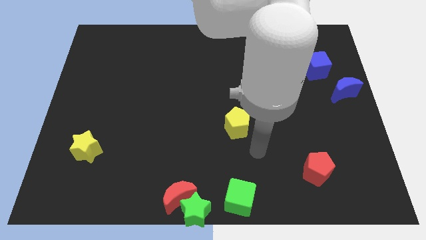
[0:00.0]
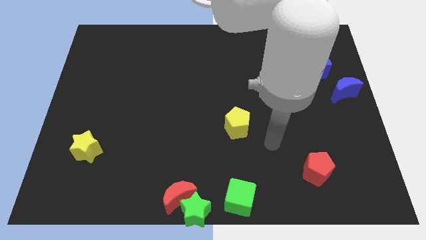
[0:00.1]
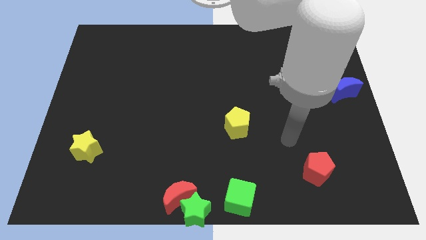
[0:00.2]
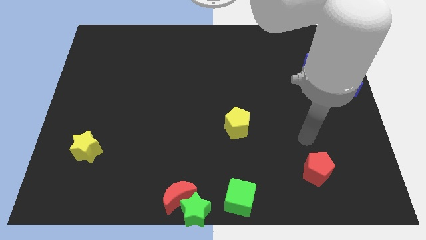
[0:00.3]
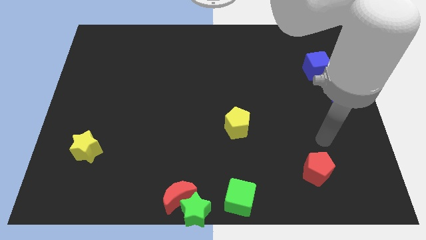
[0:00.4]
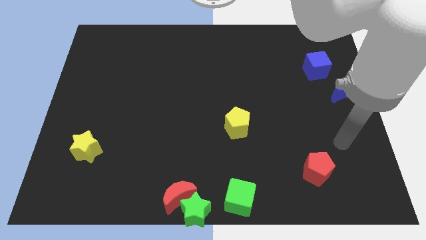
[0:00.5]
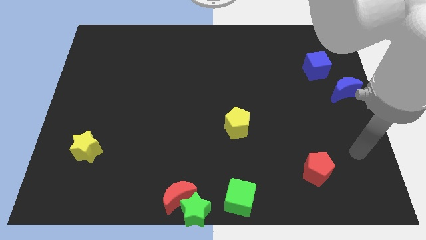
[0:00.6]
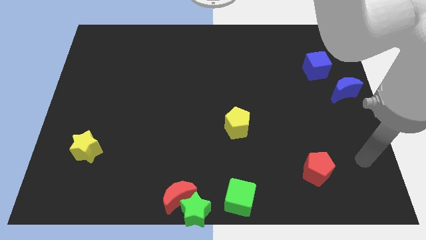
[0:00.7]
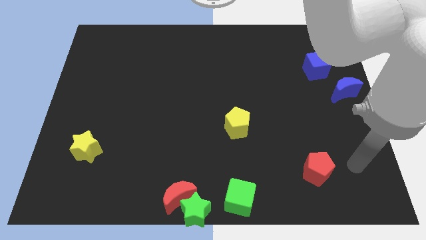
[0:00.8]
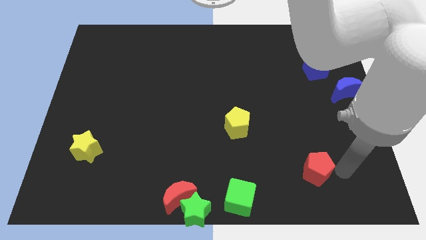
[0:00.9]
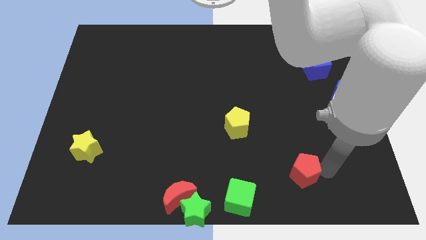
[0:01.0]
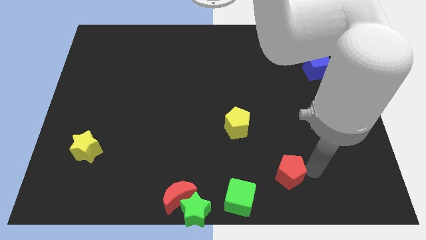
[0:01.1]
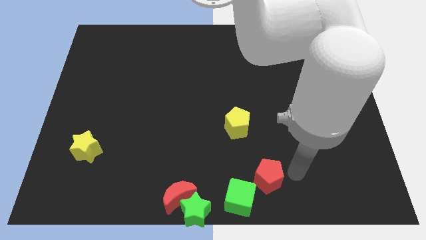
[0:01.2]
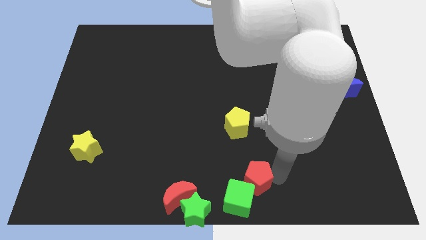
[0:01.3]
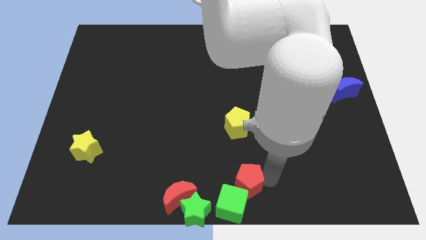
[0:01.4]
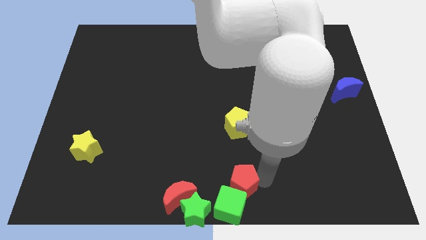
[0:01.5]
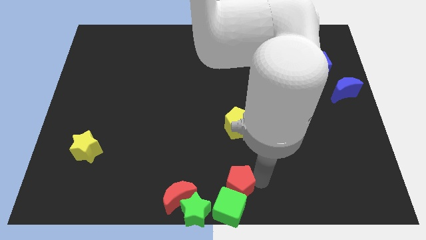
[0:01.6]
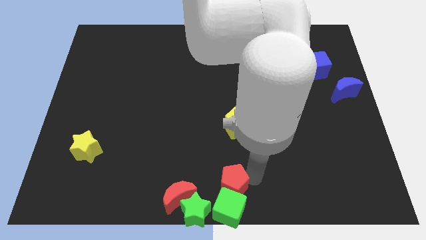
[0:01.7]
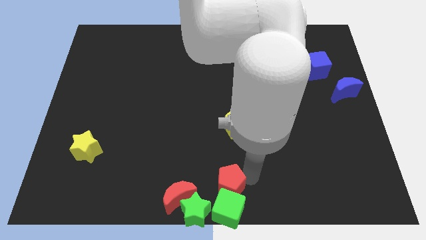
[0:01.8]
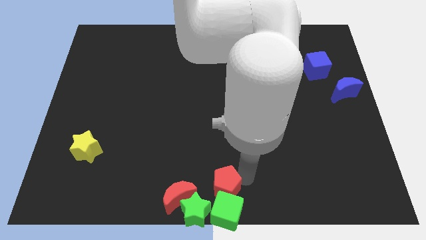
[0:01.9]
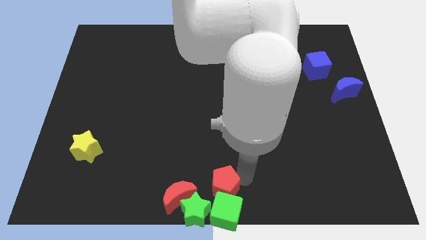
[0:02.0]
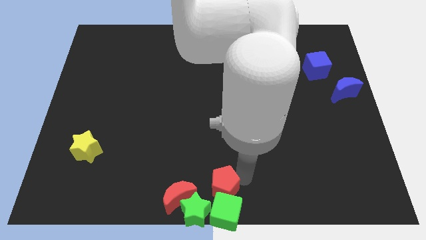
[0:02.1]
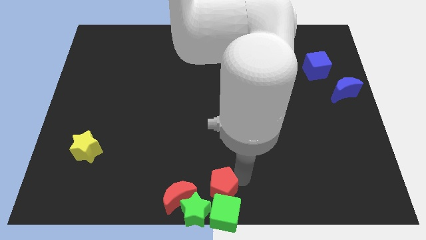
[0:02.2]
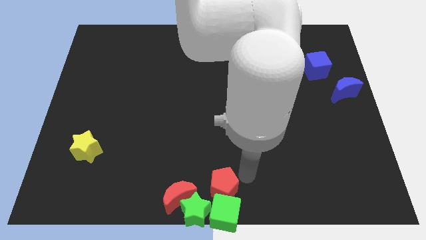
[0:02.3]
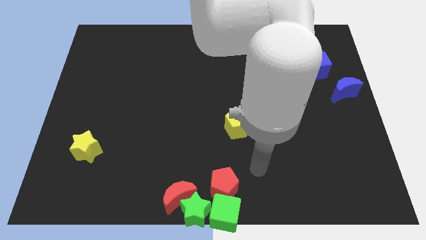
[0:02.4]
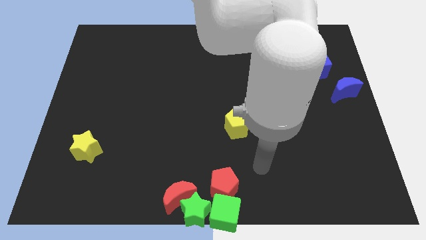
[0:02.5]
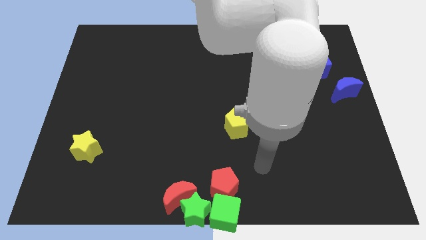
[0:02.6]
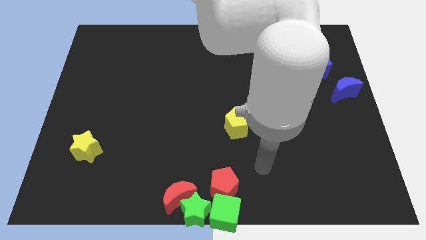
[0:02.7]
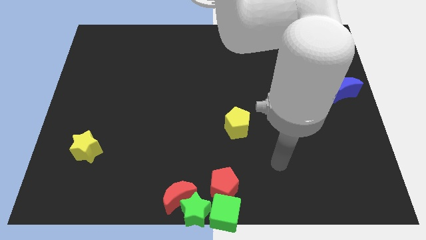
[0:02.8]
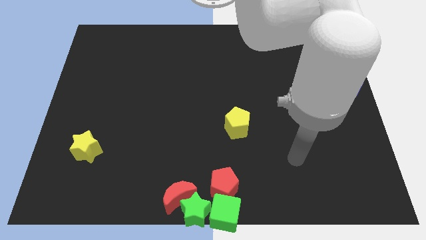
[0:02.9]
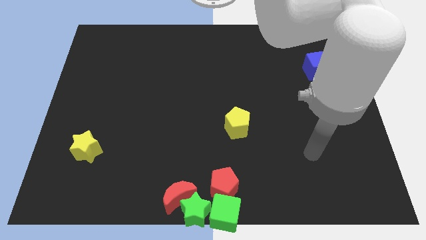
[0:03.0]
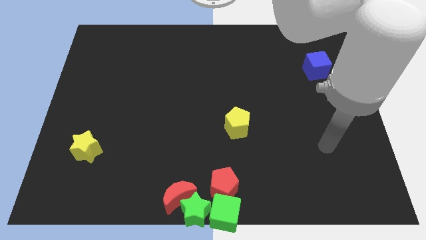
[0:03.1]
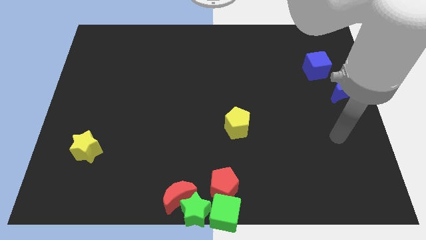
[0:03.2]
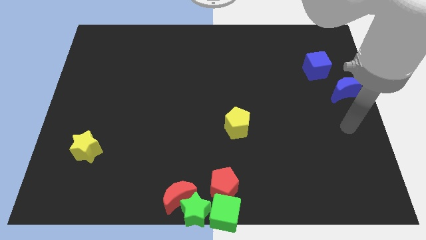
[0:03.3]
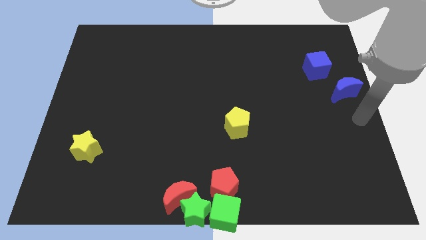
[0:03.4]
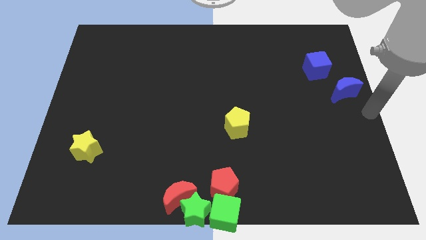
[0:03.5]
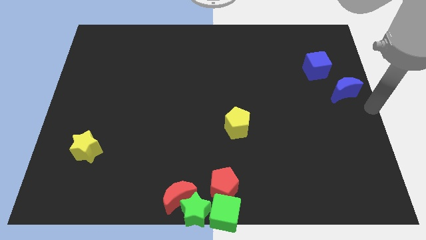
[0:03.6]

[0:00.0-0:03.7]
place the red pentagon above the green cube

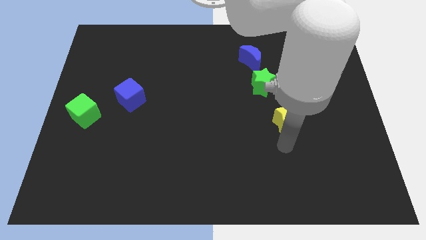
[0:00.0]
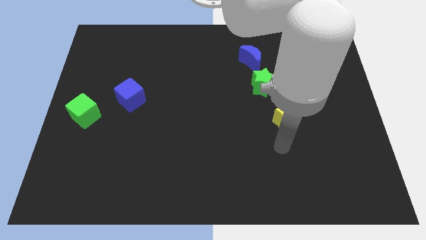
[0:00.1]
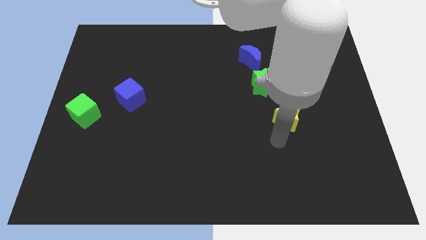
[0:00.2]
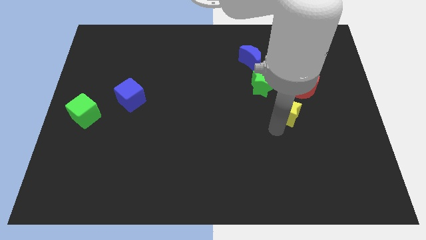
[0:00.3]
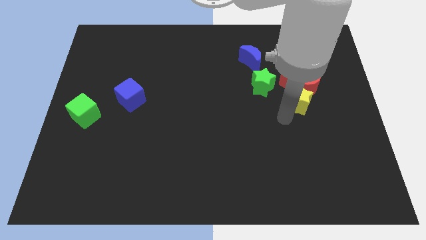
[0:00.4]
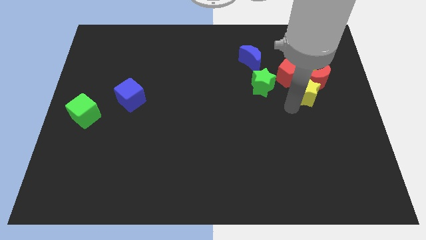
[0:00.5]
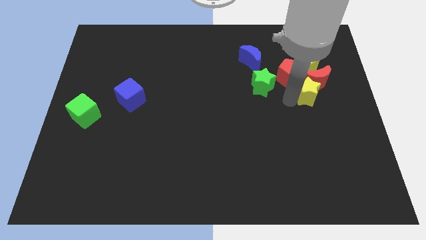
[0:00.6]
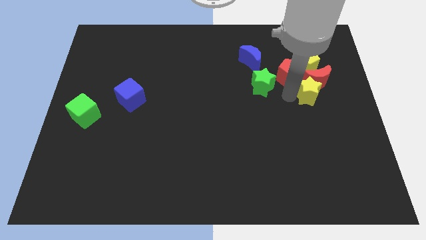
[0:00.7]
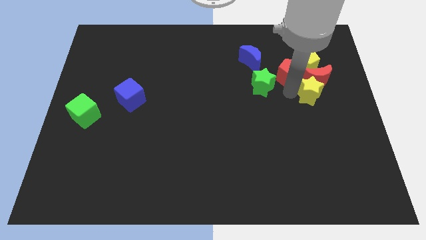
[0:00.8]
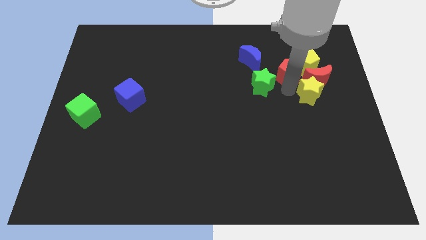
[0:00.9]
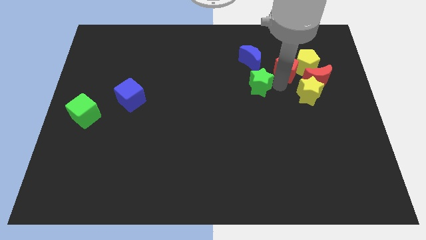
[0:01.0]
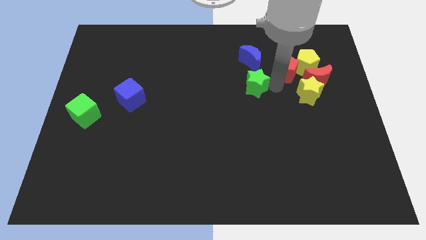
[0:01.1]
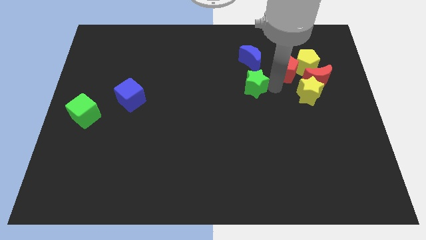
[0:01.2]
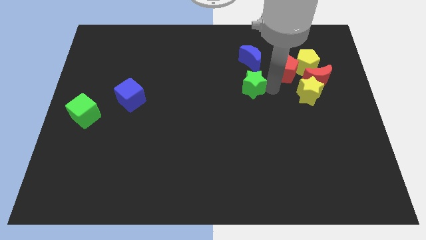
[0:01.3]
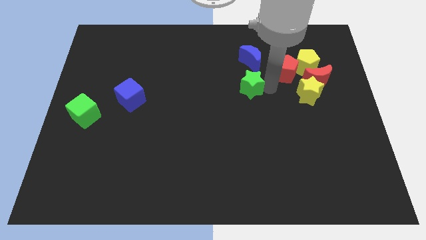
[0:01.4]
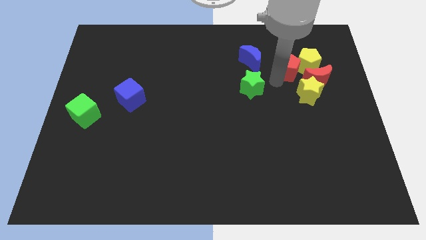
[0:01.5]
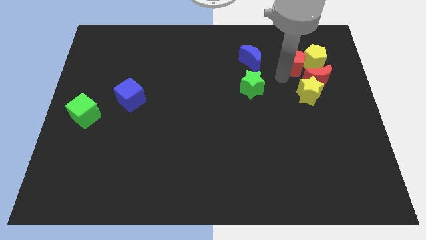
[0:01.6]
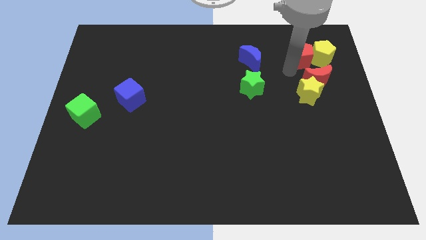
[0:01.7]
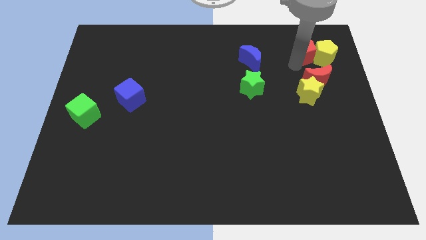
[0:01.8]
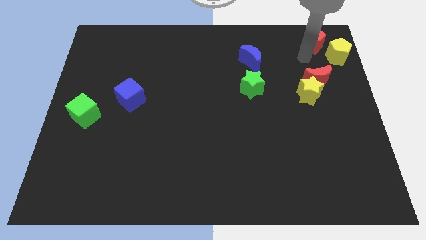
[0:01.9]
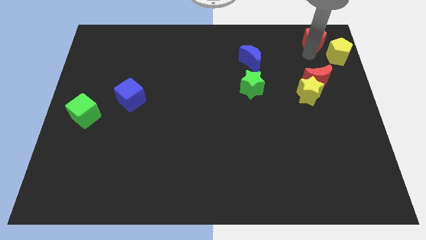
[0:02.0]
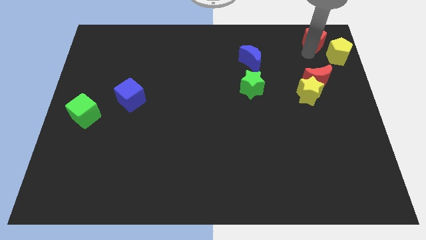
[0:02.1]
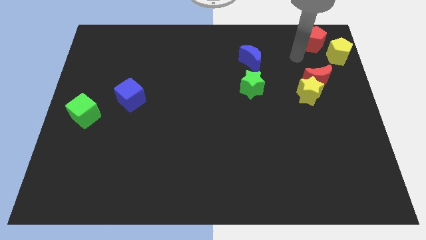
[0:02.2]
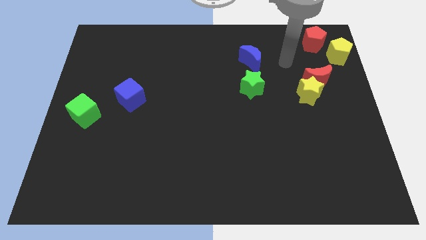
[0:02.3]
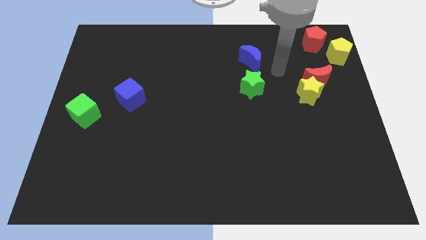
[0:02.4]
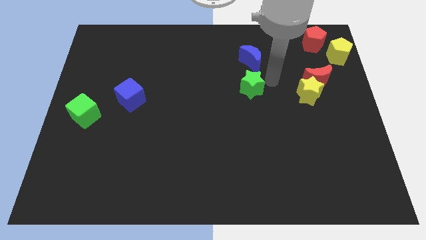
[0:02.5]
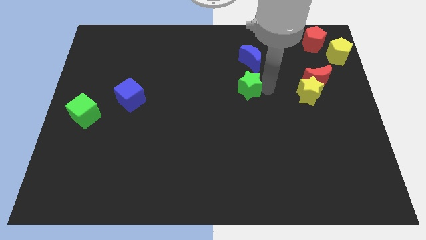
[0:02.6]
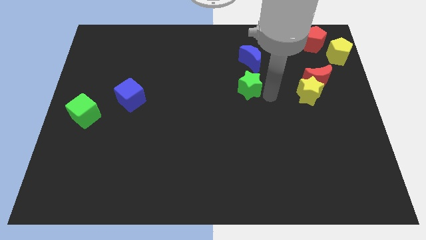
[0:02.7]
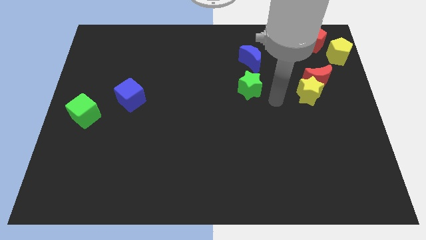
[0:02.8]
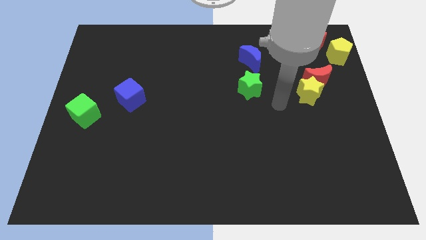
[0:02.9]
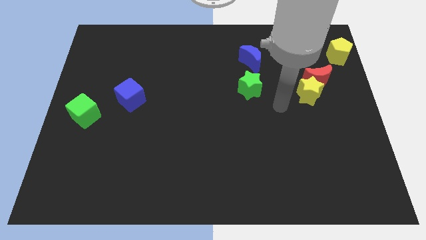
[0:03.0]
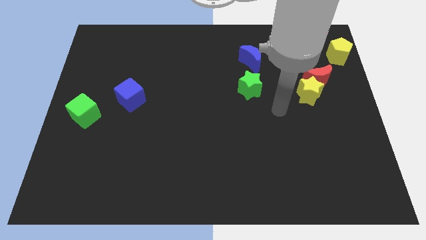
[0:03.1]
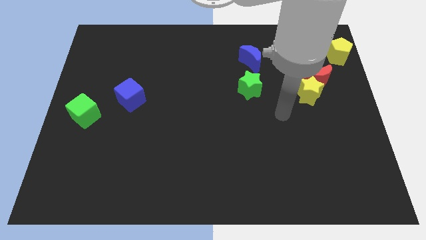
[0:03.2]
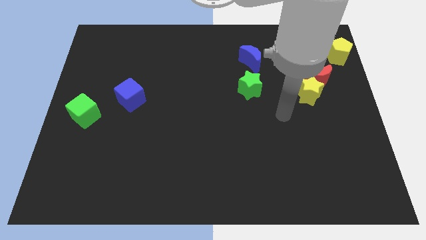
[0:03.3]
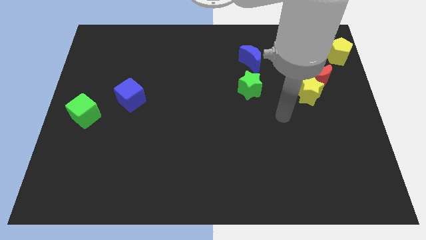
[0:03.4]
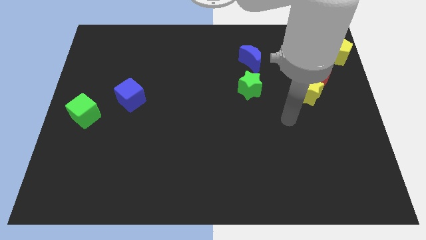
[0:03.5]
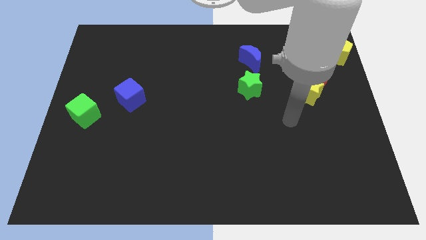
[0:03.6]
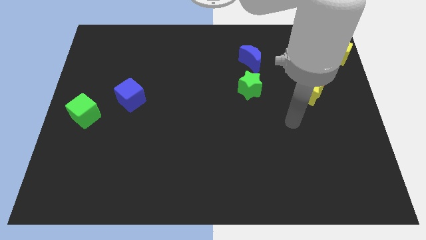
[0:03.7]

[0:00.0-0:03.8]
separate the red pentagon and yellow pentagon

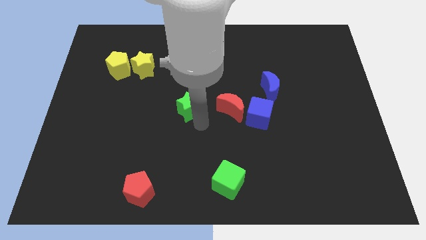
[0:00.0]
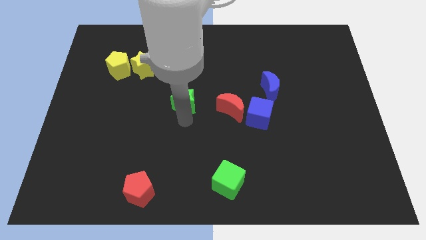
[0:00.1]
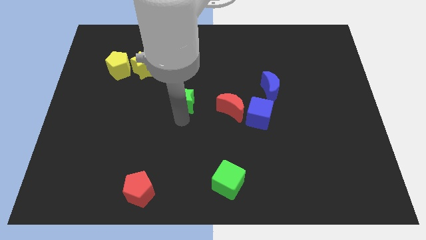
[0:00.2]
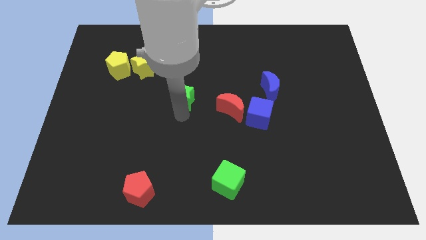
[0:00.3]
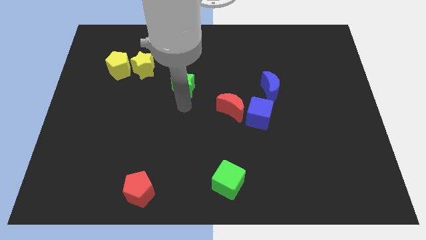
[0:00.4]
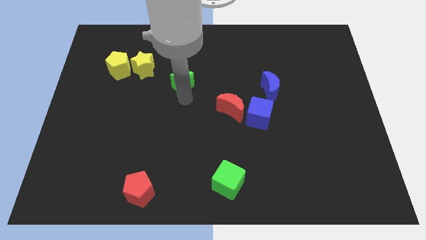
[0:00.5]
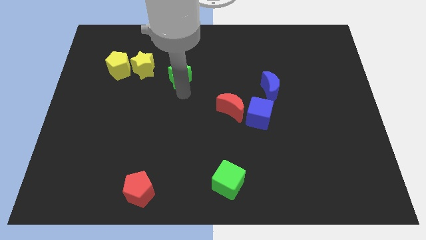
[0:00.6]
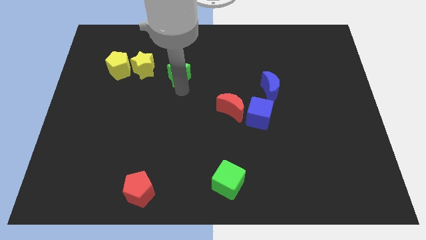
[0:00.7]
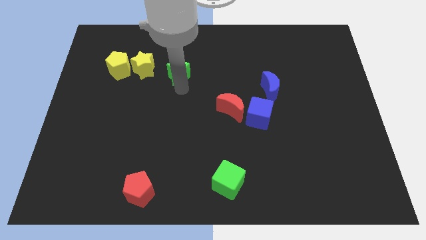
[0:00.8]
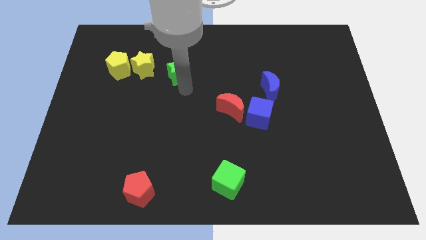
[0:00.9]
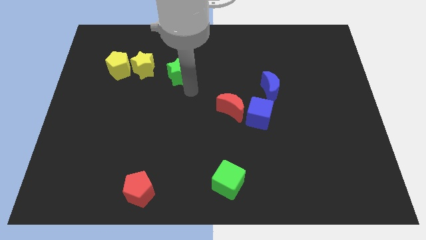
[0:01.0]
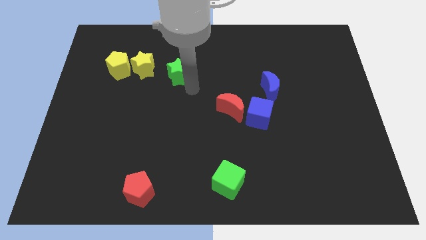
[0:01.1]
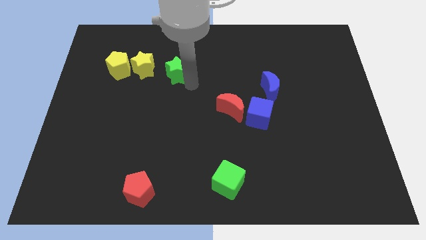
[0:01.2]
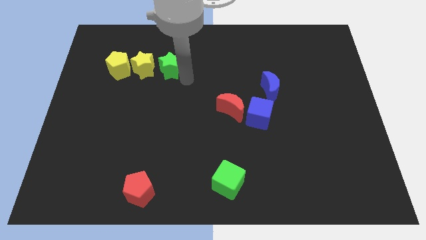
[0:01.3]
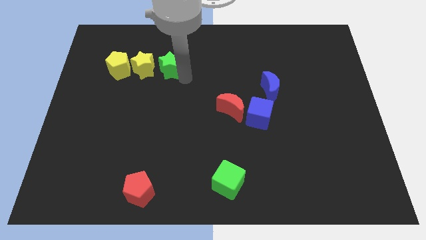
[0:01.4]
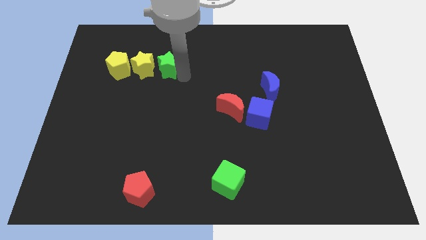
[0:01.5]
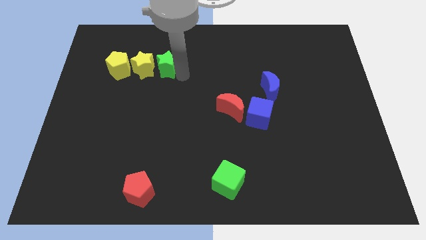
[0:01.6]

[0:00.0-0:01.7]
place the green star to the right of the yellow star
